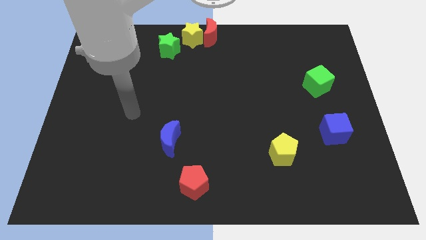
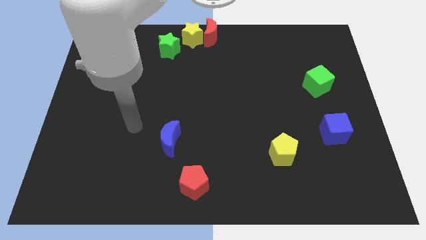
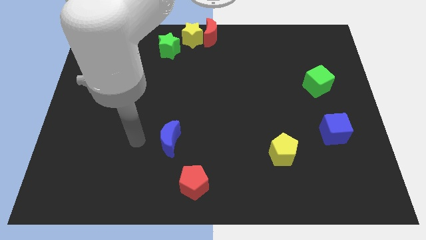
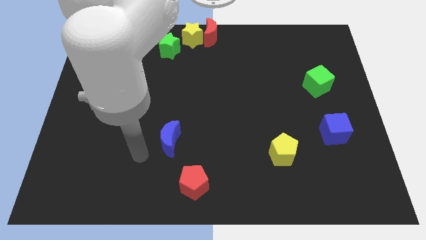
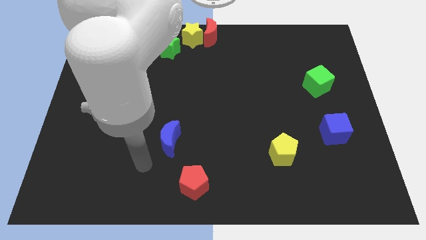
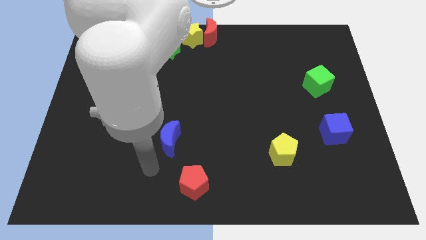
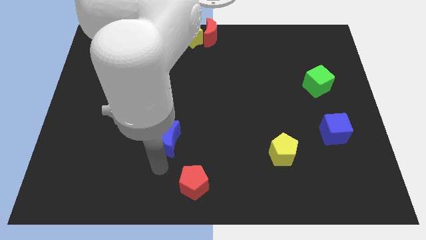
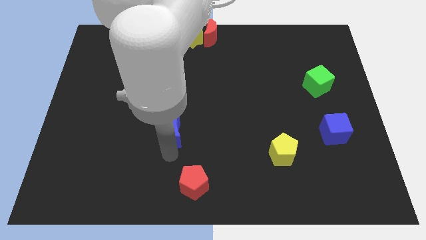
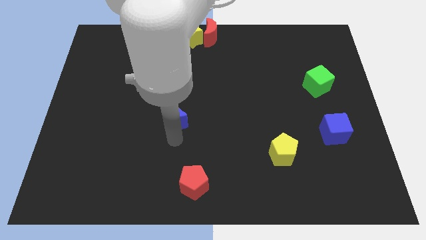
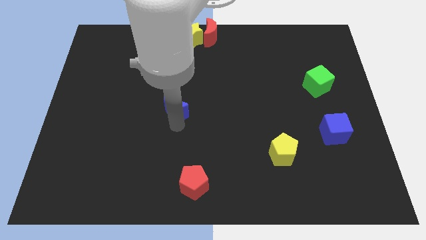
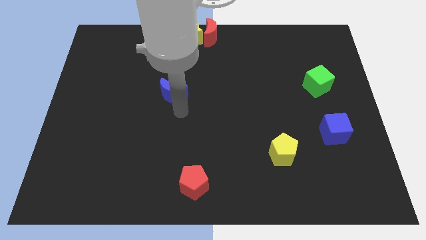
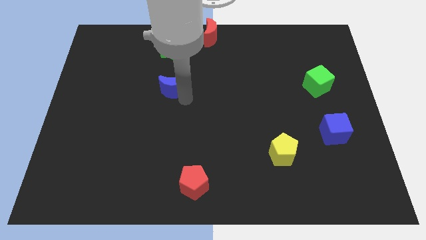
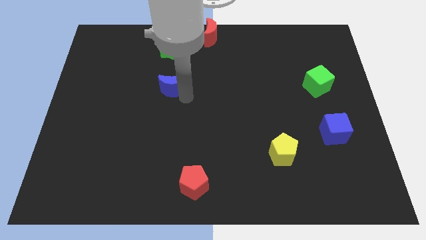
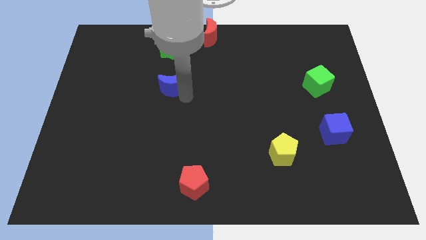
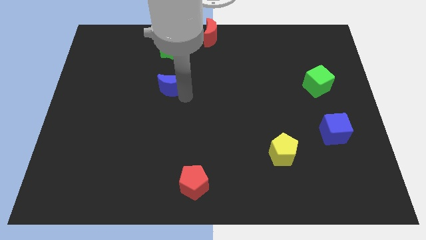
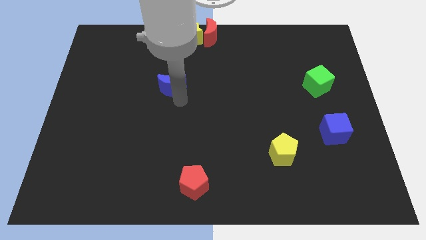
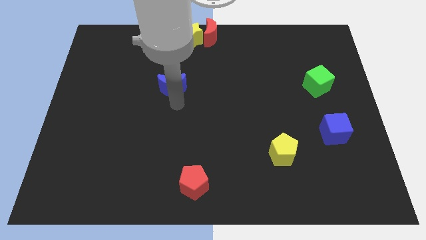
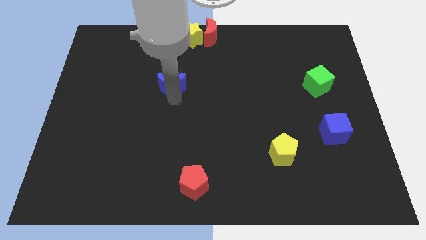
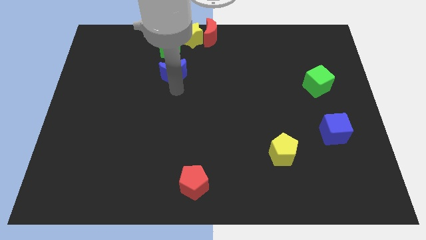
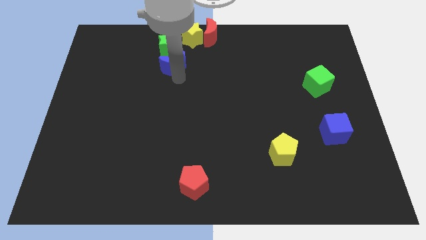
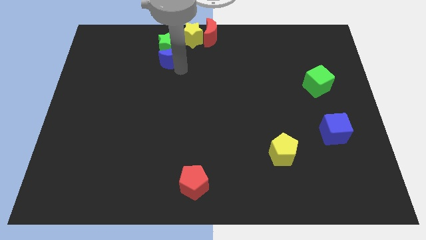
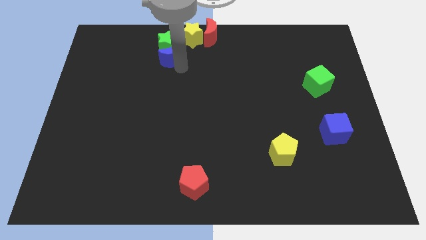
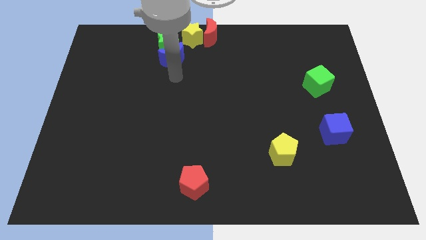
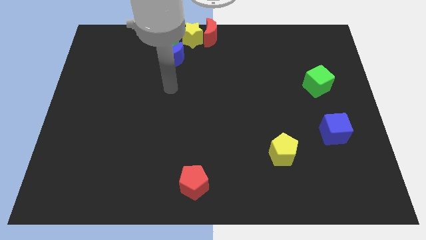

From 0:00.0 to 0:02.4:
push the blue crescent into the green star

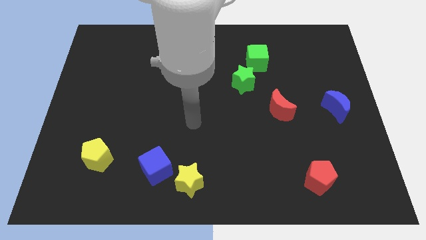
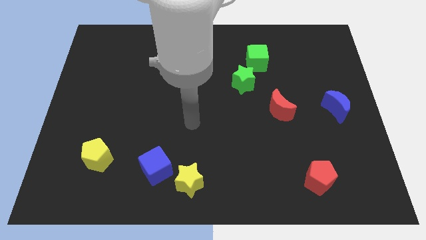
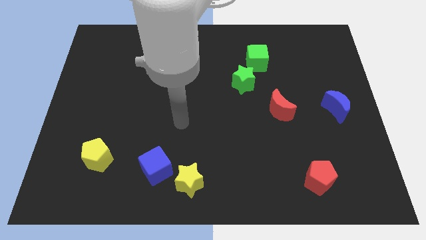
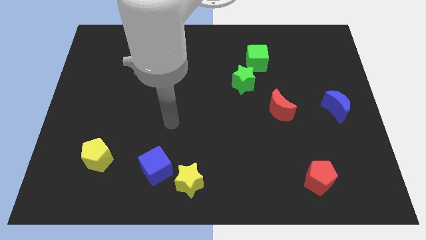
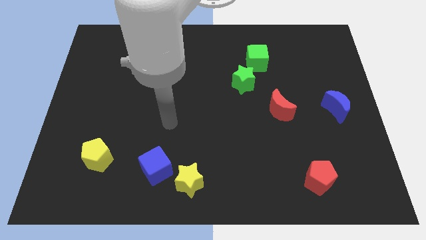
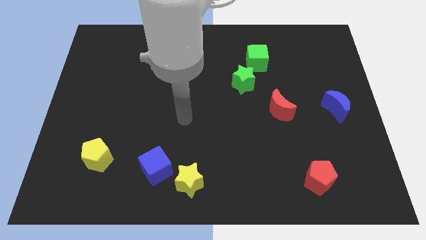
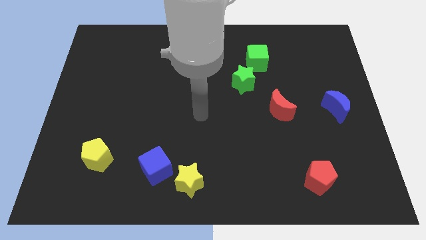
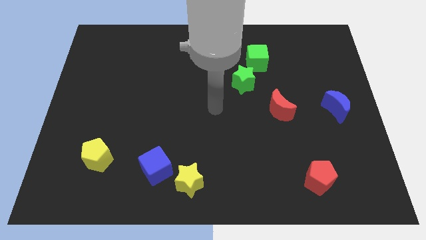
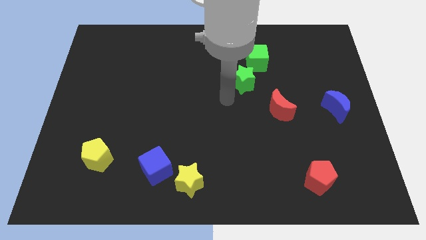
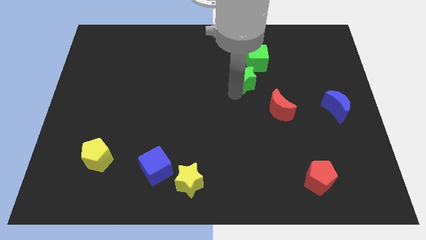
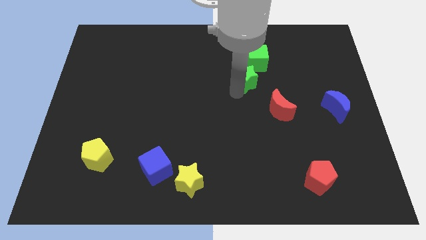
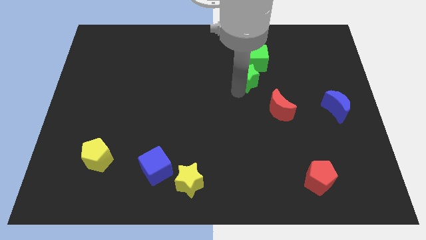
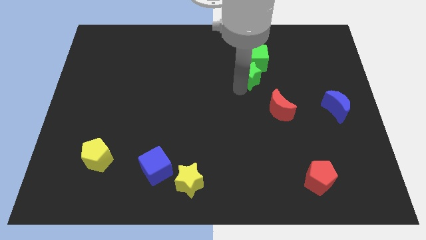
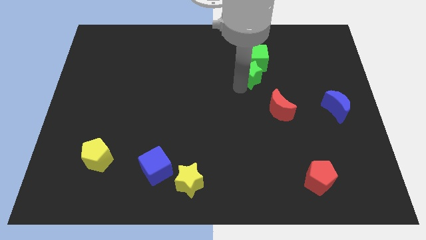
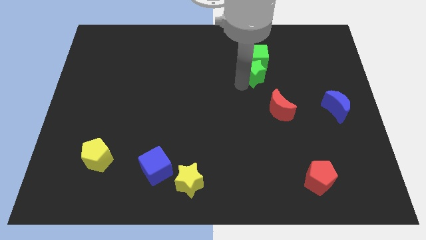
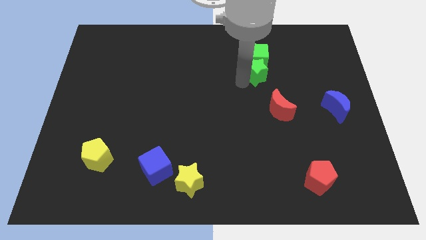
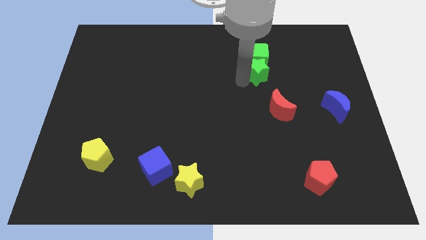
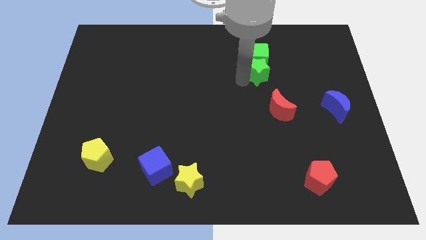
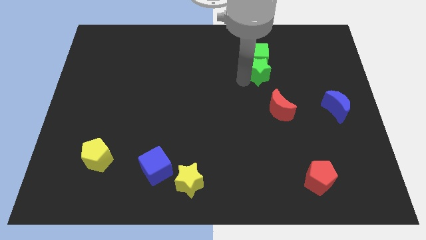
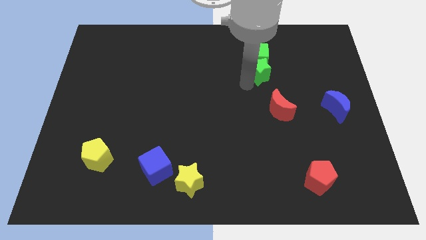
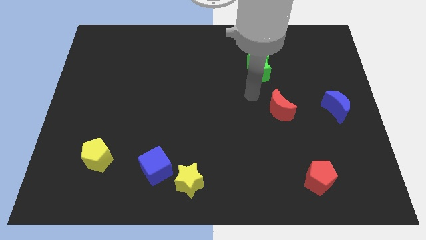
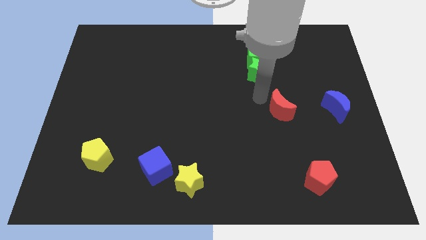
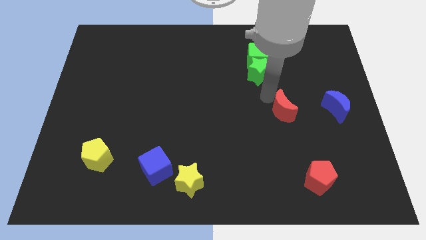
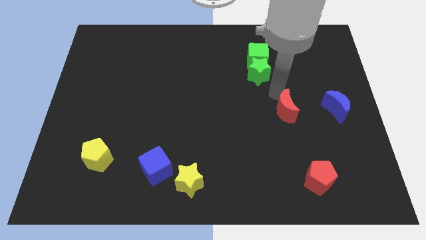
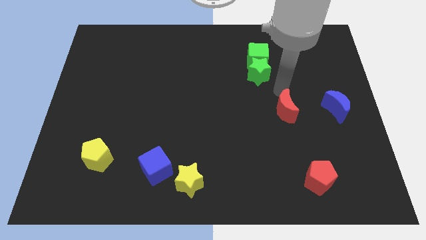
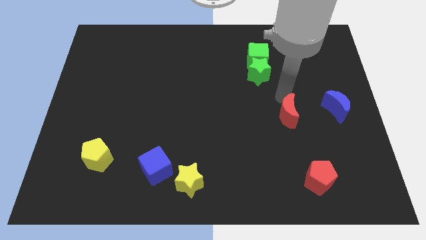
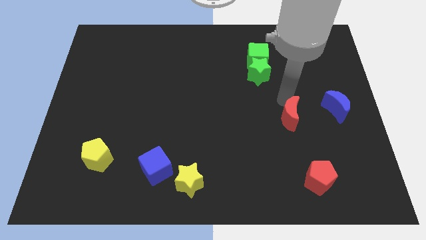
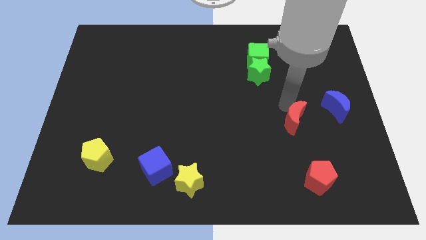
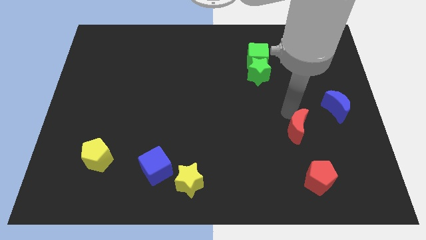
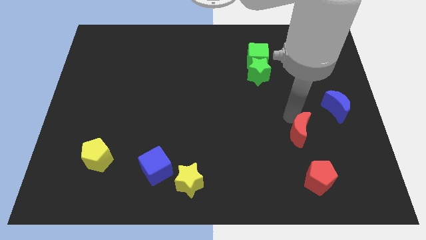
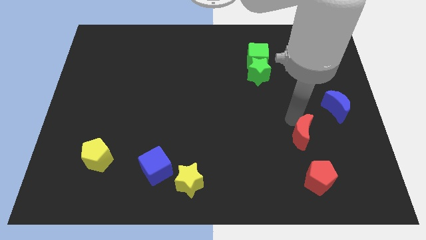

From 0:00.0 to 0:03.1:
tap on the top left edge of red moon

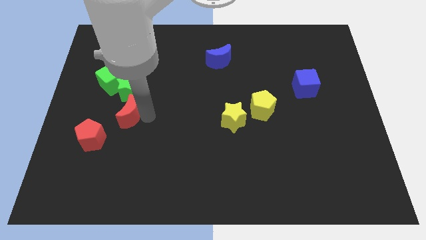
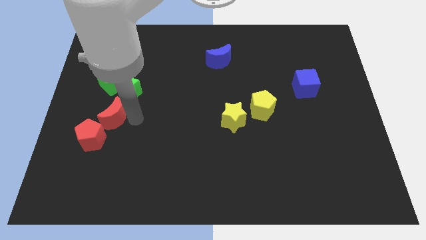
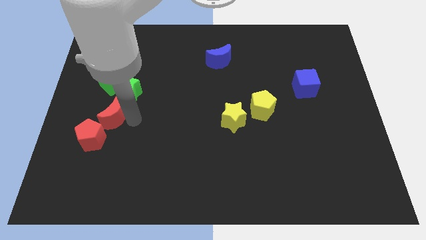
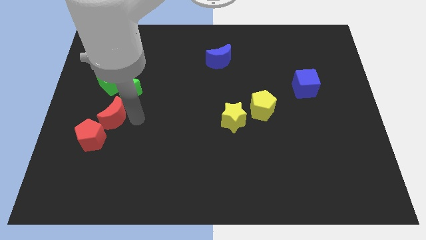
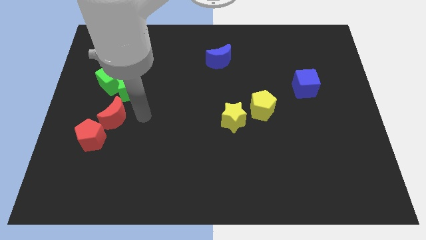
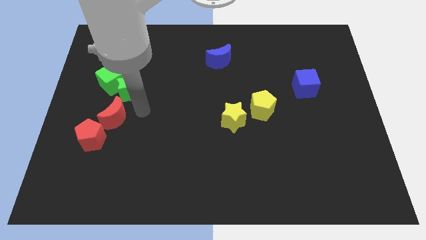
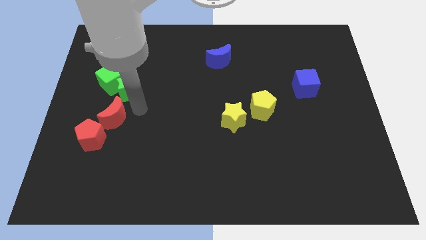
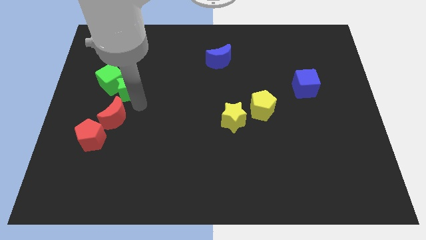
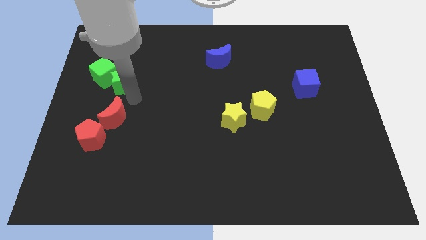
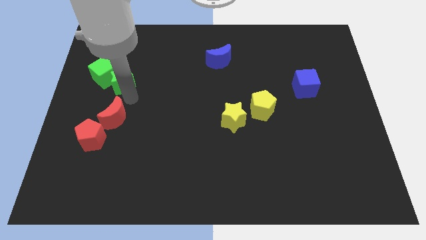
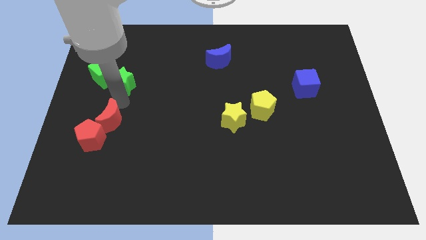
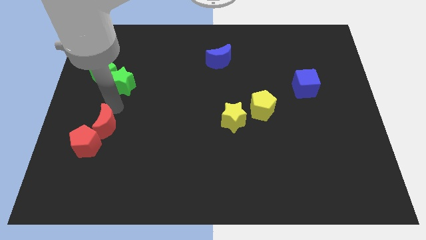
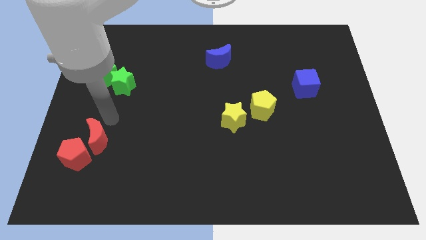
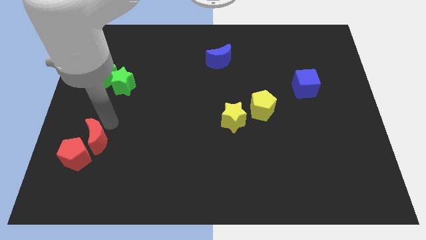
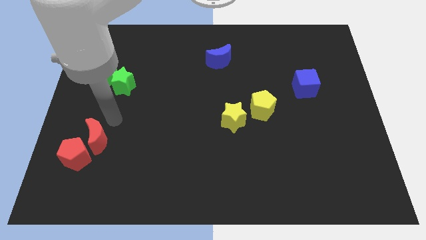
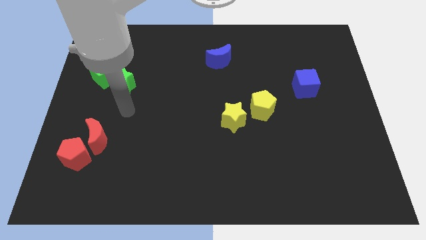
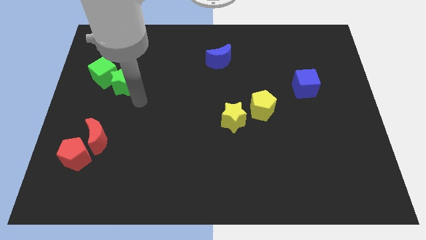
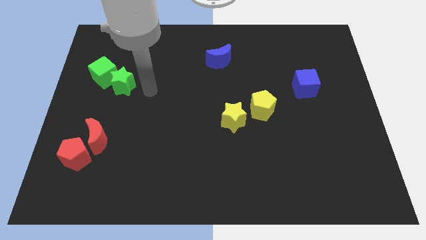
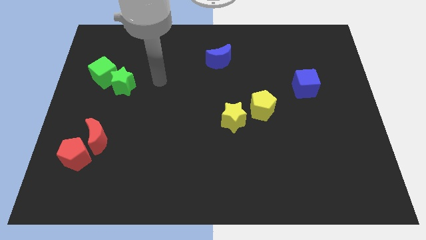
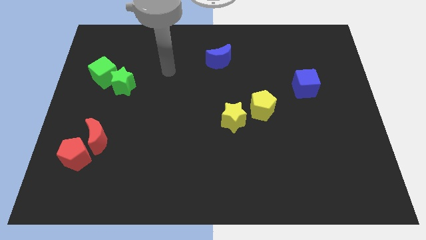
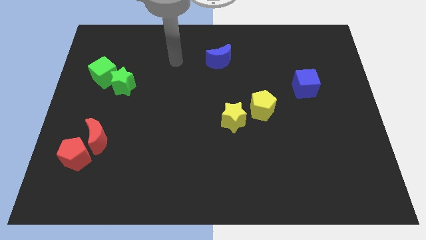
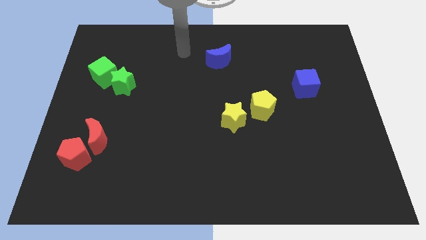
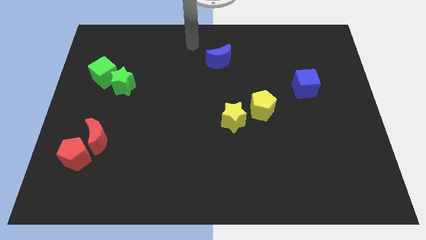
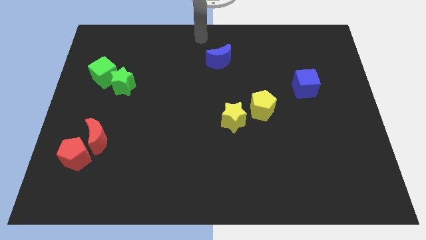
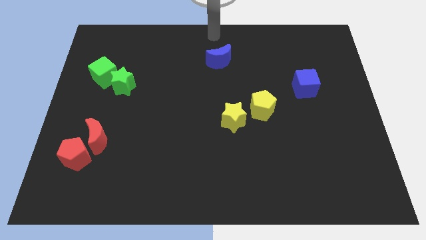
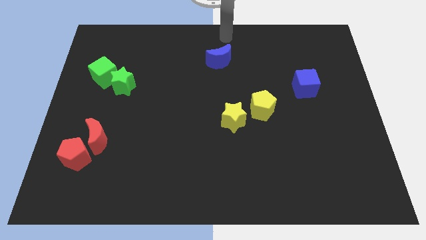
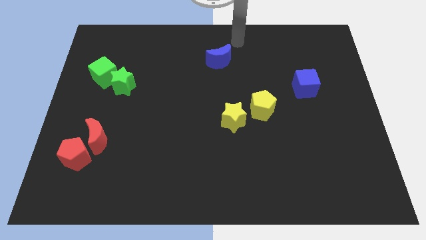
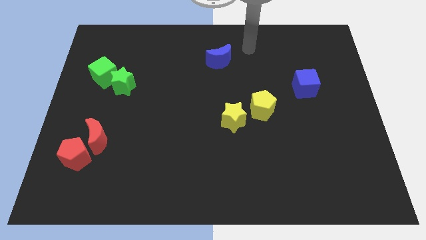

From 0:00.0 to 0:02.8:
move the red blocks to the bottom left

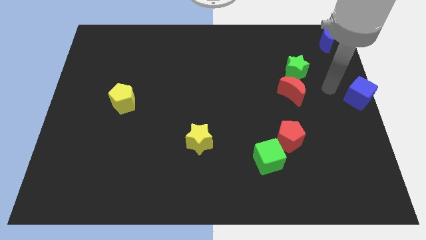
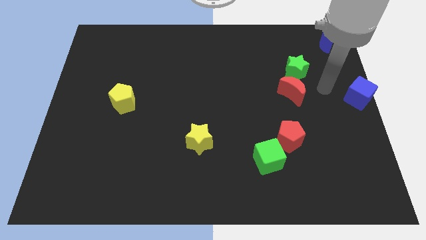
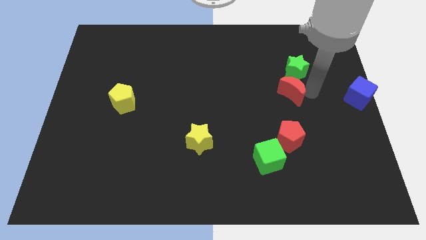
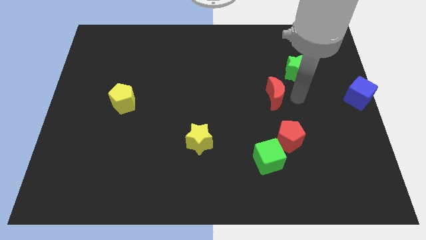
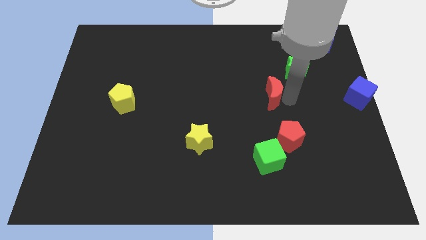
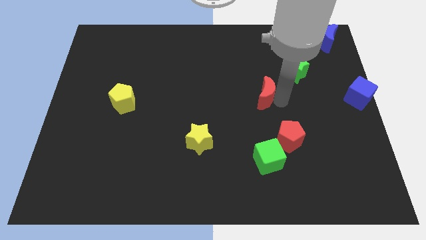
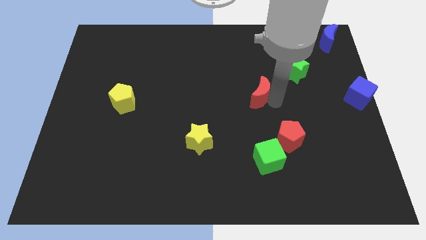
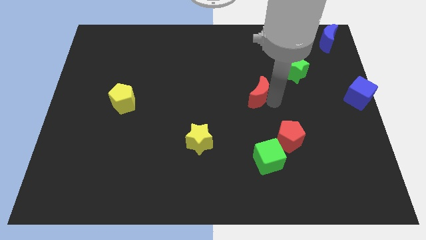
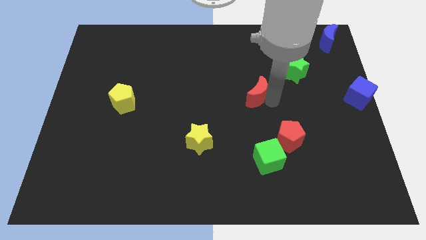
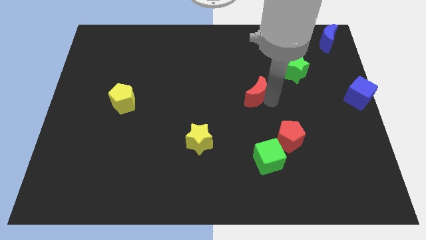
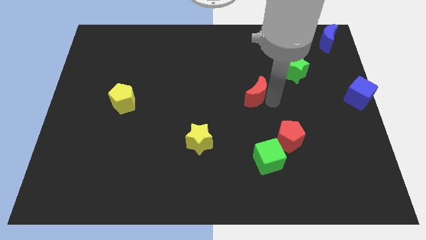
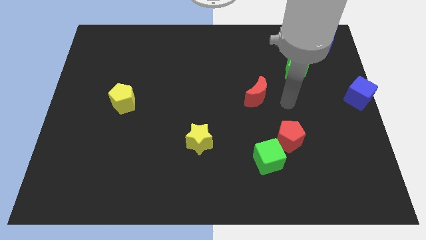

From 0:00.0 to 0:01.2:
separate the red crescent and the green star
